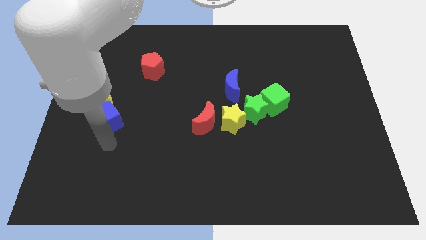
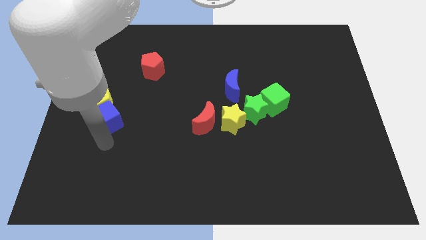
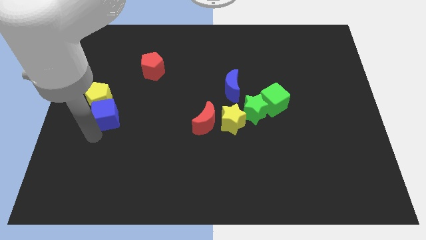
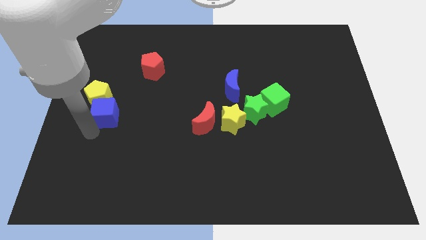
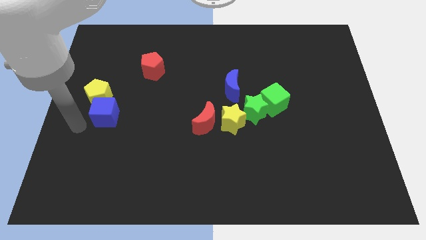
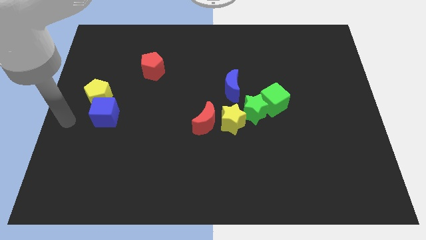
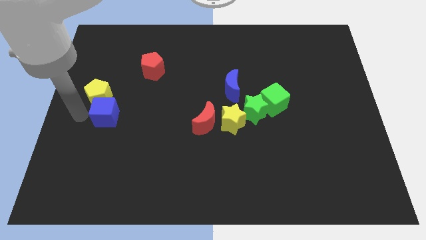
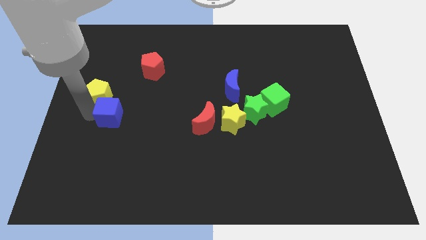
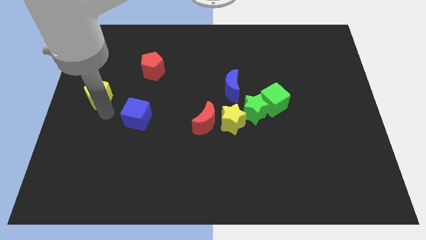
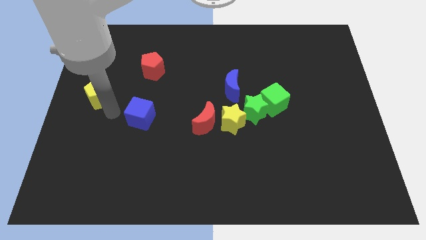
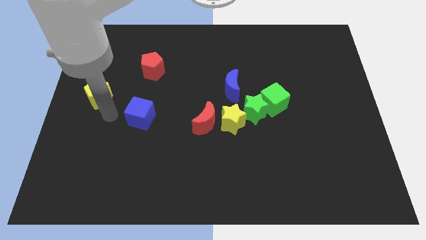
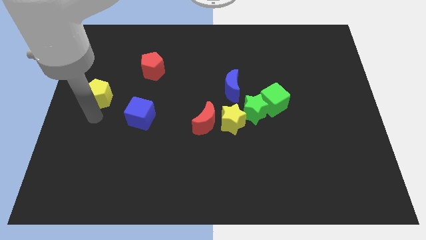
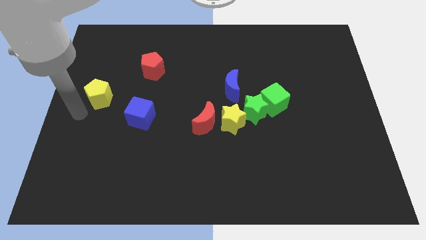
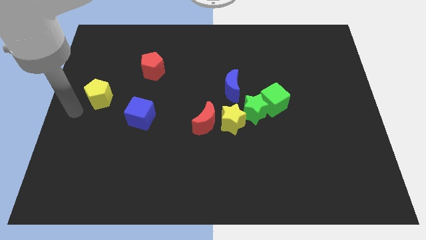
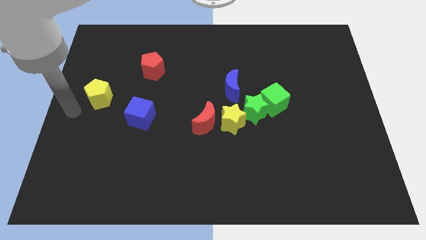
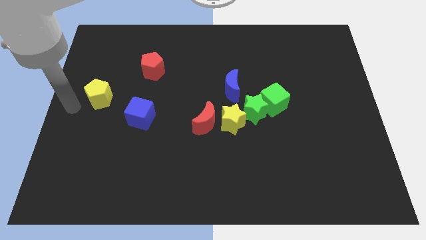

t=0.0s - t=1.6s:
separate blue cube from the yellow pentagon

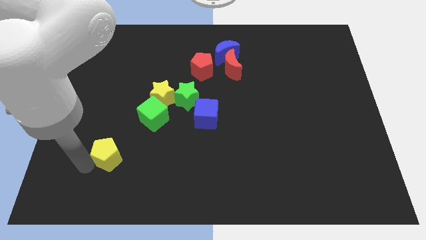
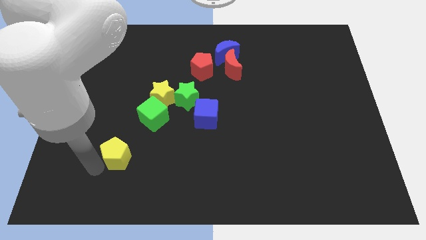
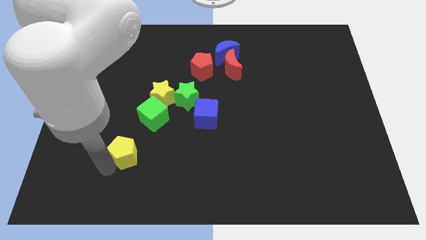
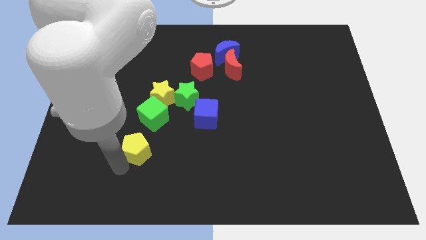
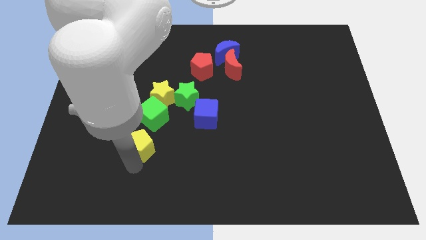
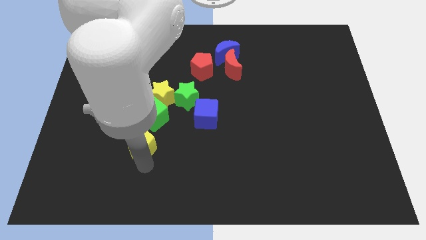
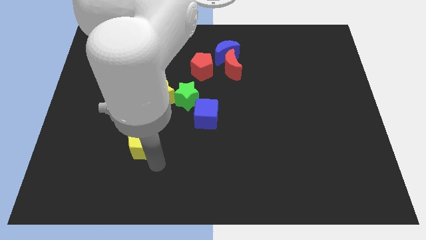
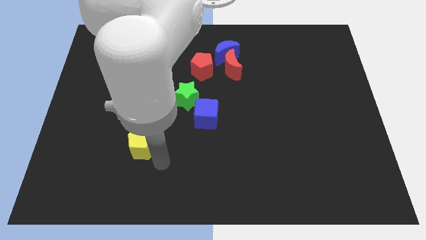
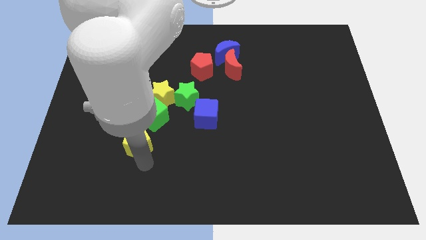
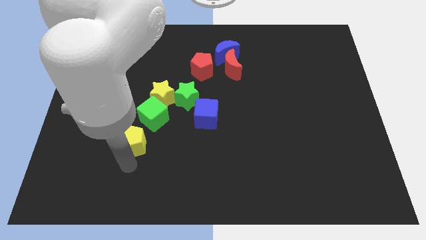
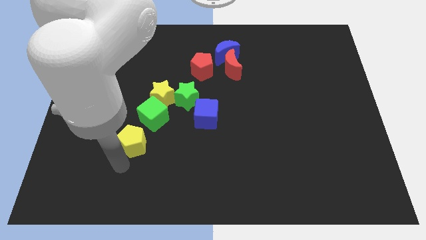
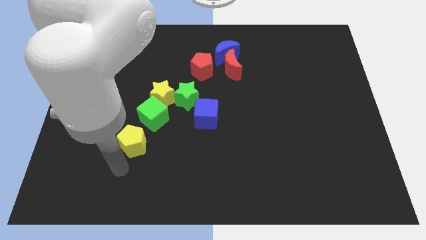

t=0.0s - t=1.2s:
push yellow pentagon towards green cube

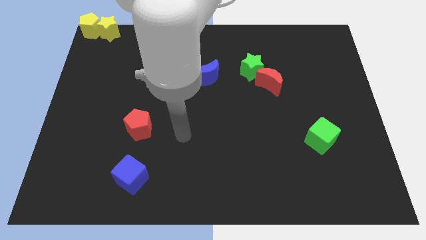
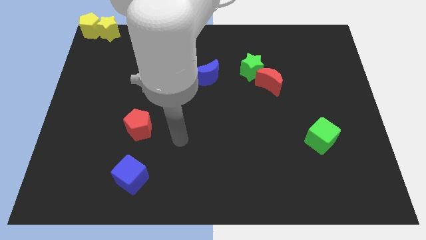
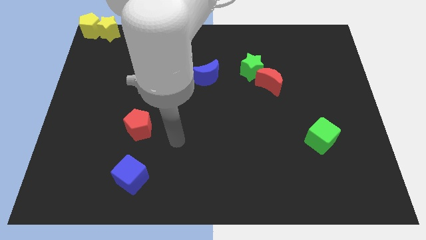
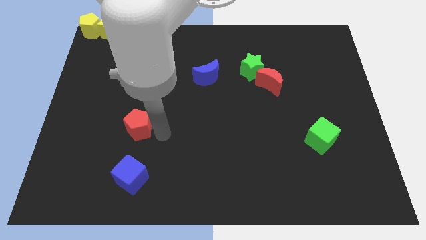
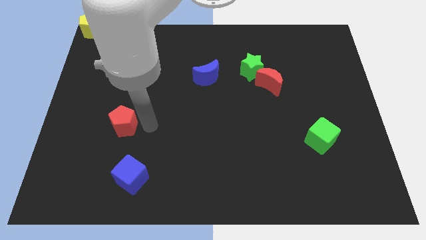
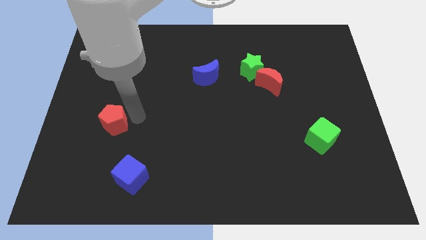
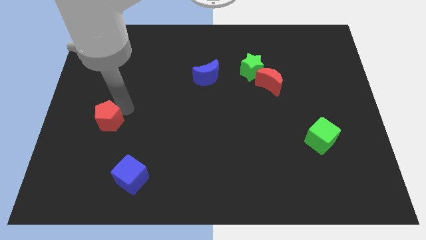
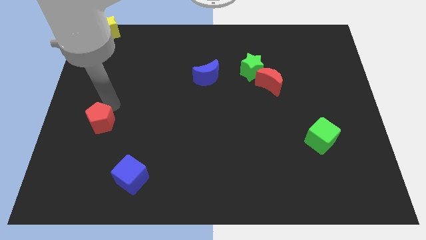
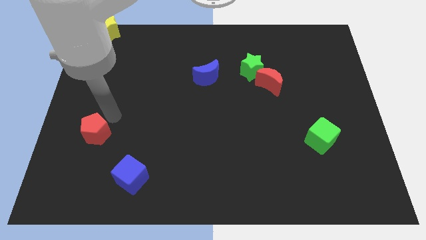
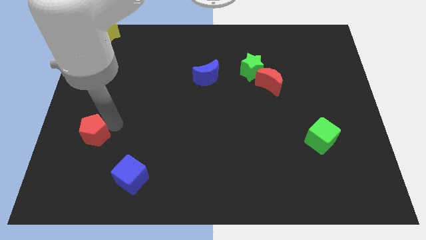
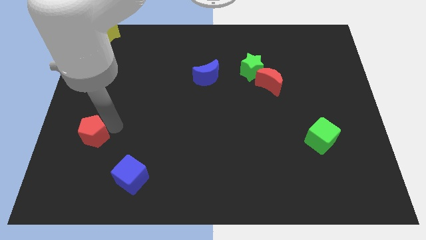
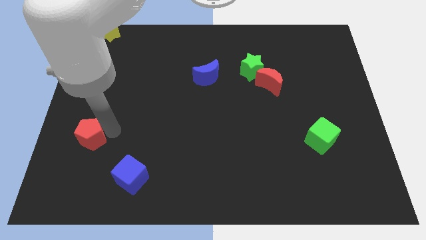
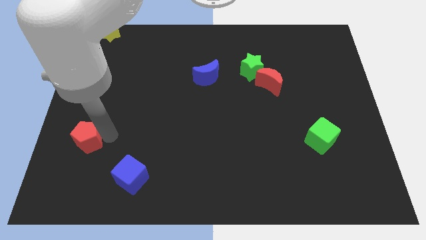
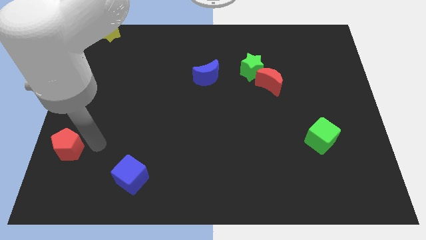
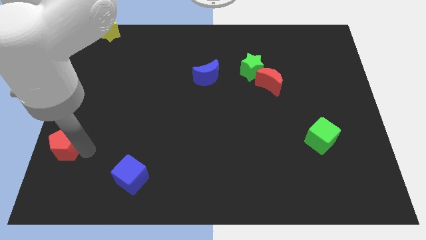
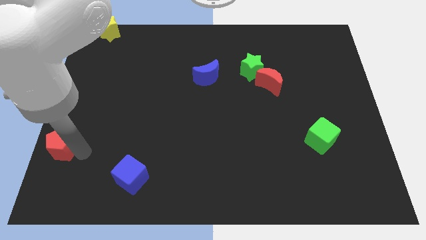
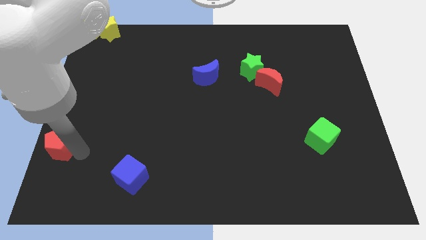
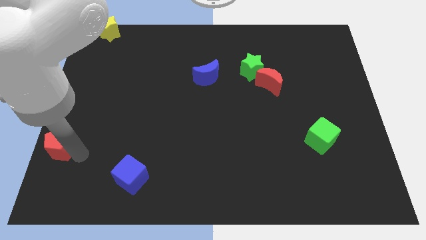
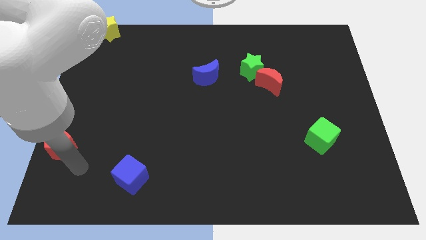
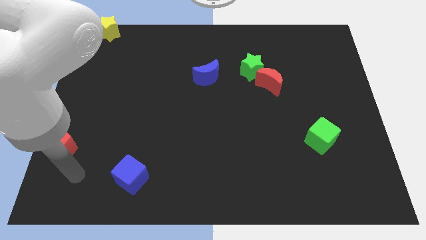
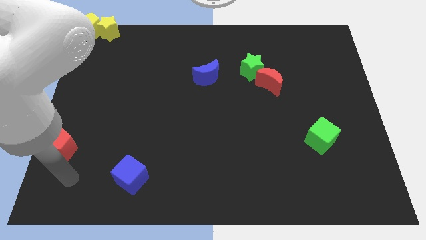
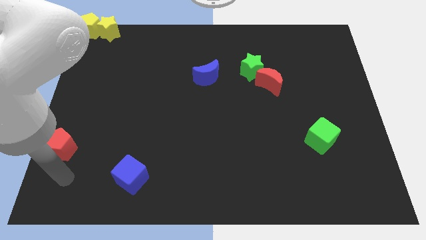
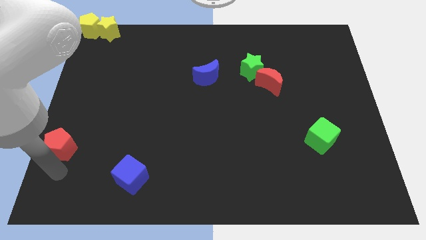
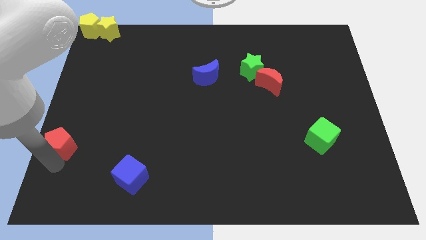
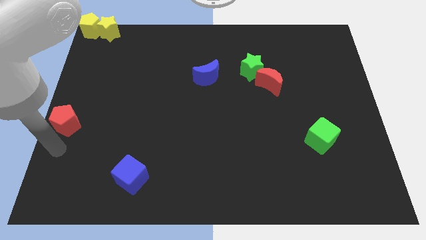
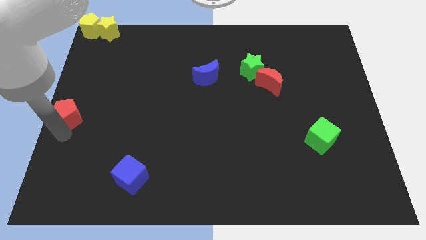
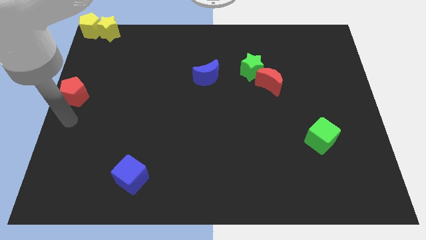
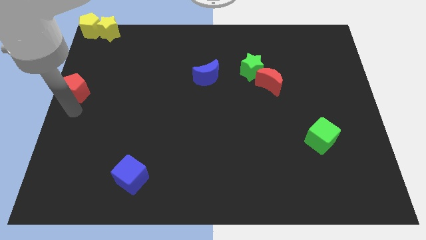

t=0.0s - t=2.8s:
place red pentagon at the center of teh board

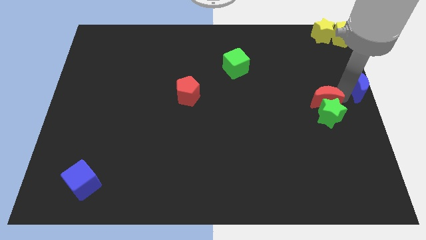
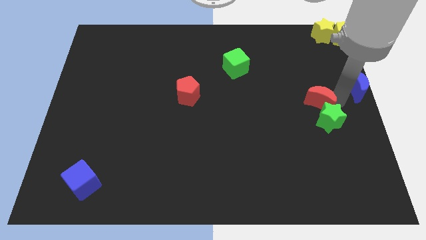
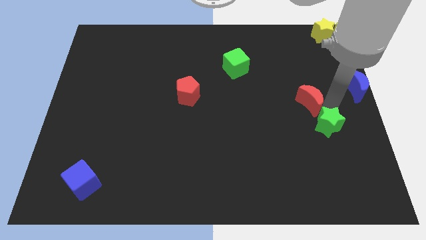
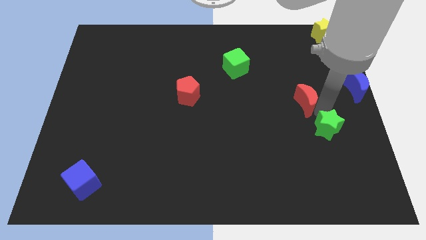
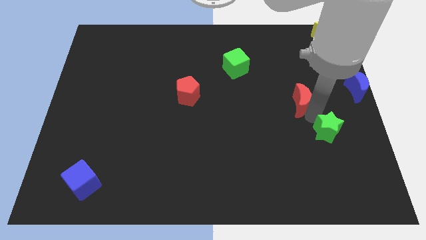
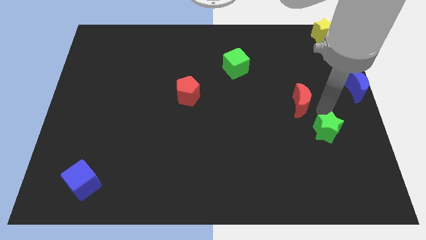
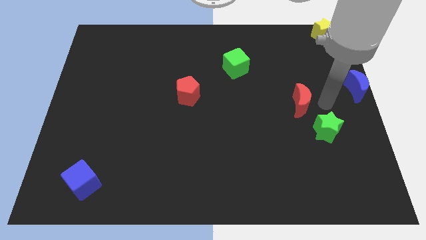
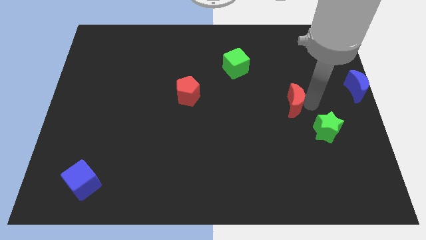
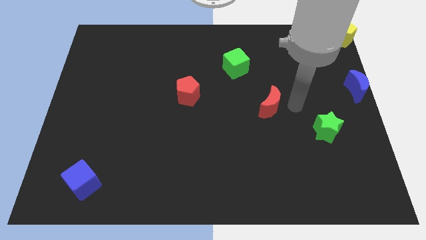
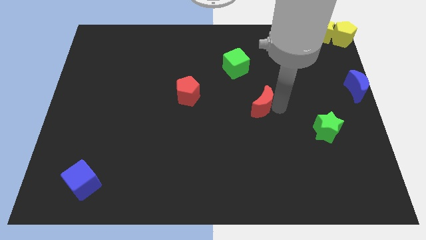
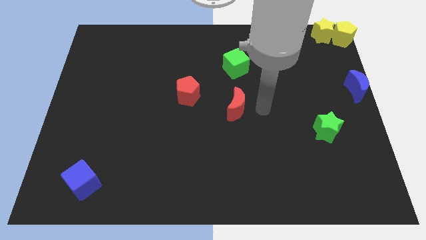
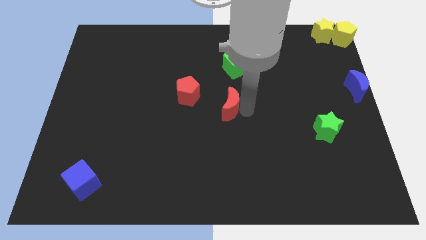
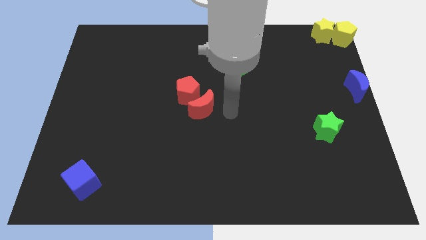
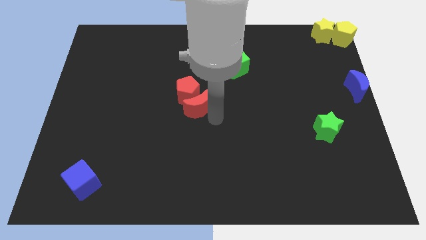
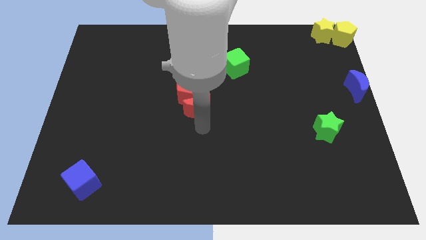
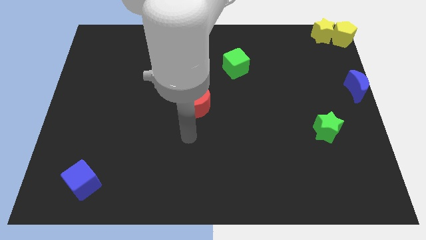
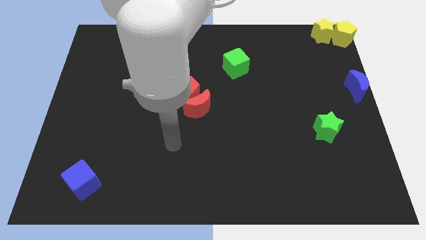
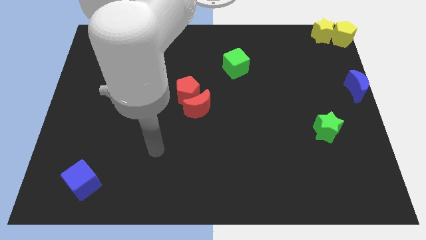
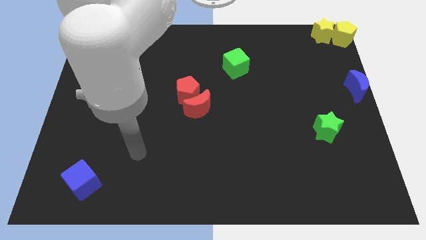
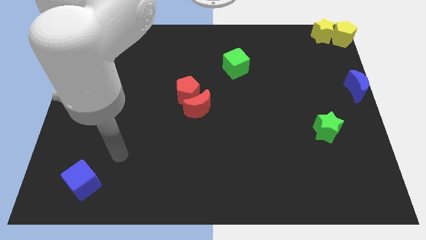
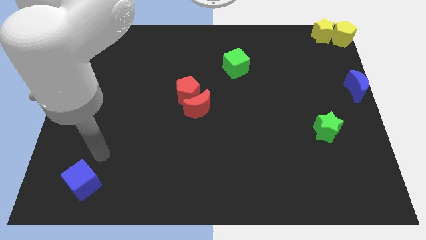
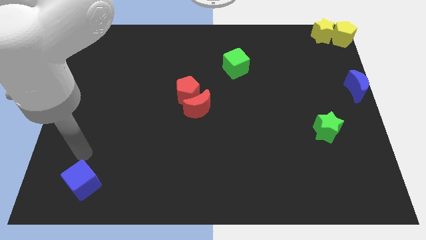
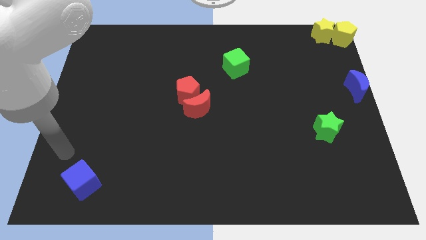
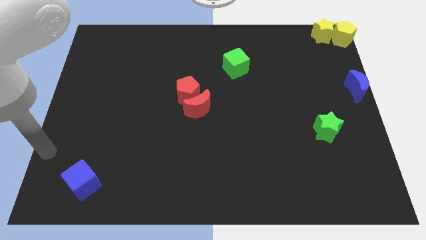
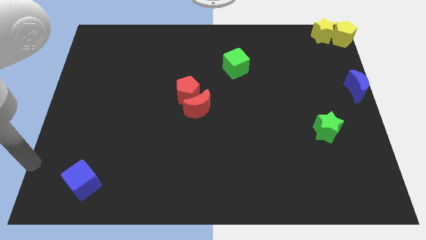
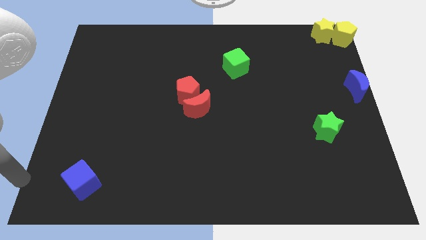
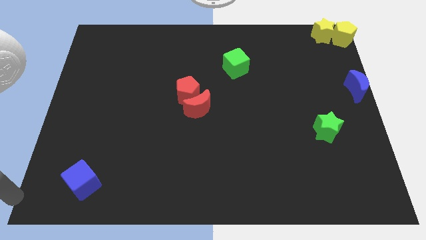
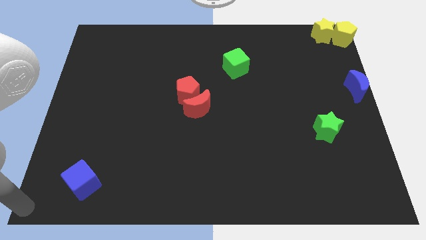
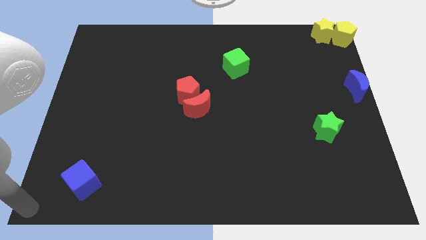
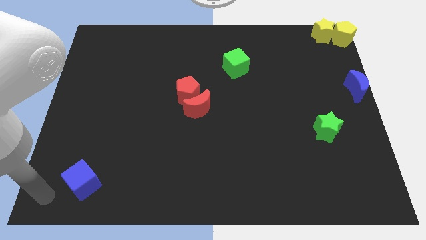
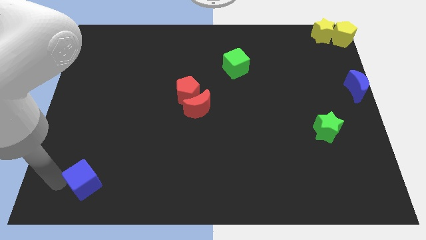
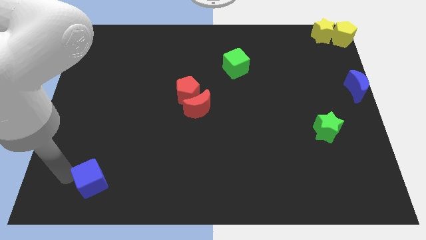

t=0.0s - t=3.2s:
place the red moon diagonally to the green cube

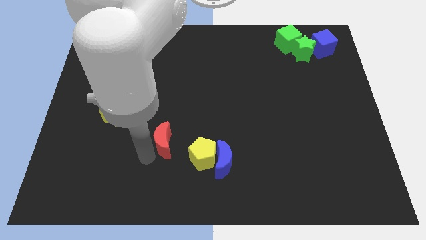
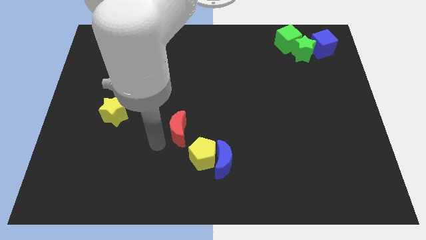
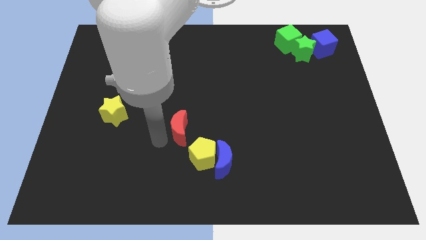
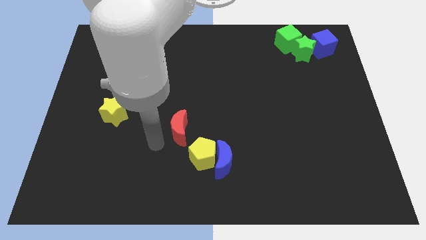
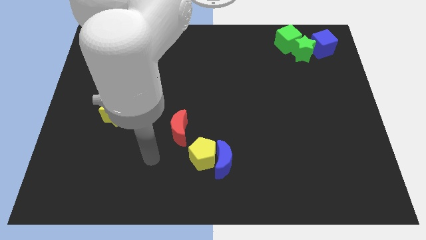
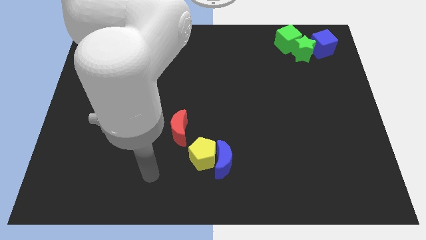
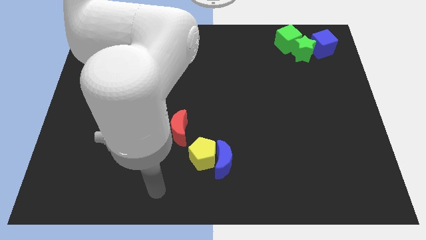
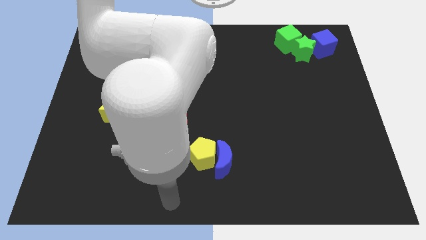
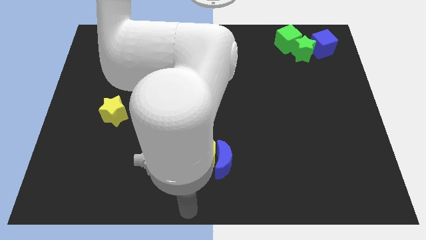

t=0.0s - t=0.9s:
move the red crescent left above the yellow pentagon
